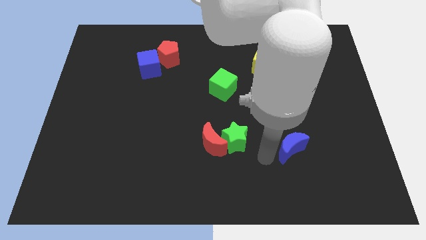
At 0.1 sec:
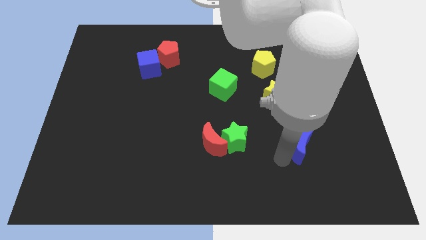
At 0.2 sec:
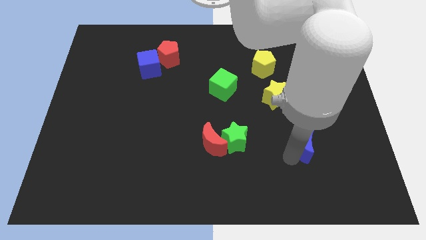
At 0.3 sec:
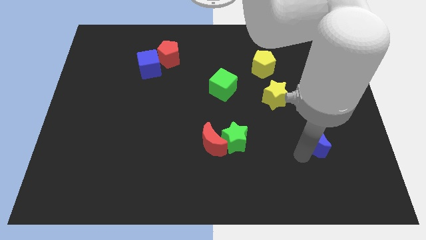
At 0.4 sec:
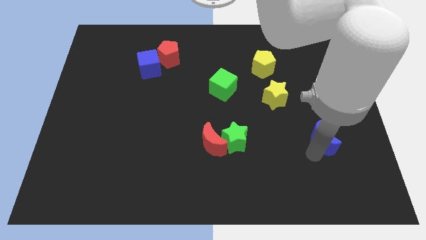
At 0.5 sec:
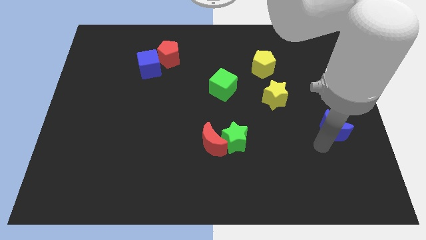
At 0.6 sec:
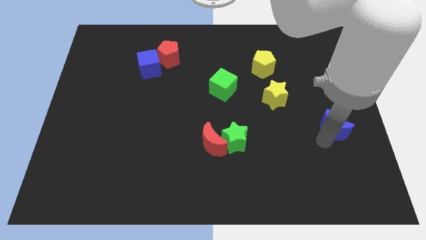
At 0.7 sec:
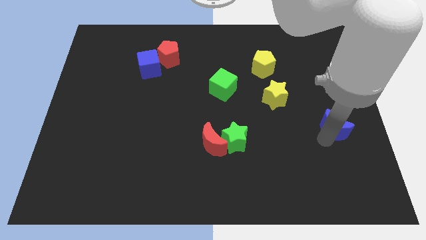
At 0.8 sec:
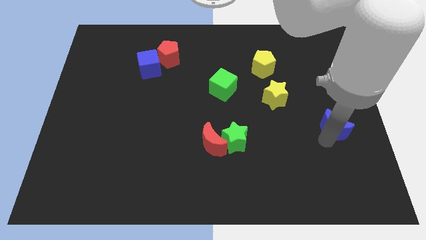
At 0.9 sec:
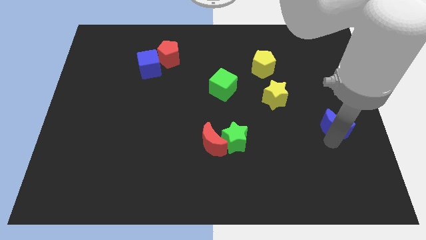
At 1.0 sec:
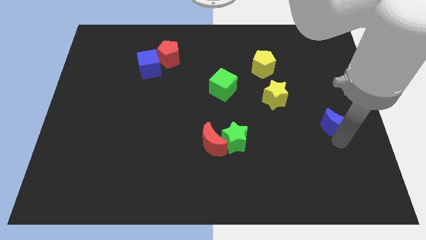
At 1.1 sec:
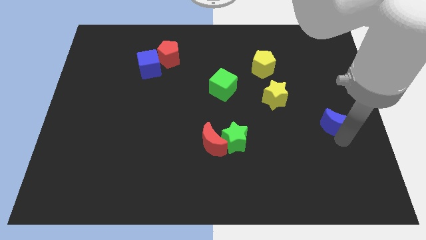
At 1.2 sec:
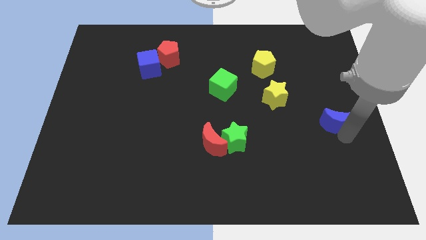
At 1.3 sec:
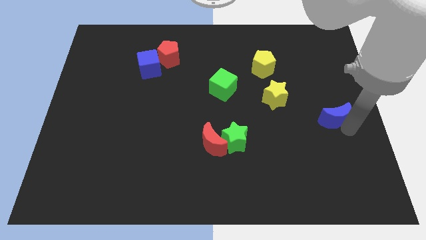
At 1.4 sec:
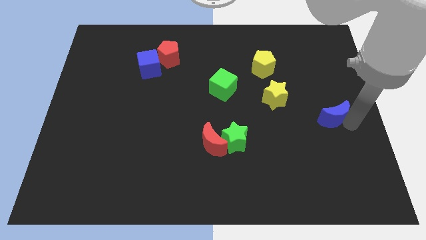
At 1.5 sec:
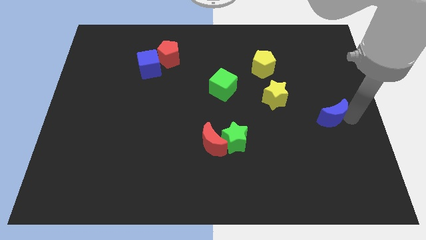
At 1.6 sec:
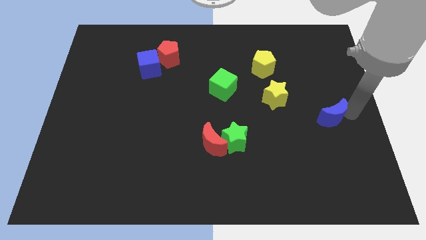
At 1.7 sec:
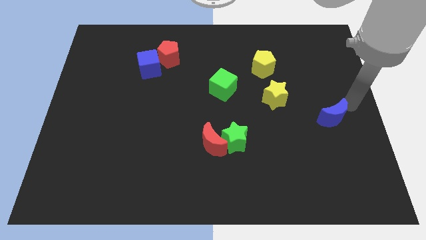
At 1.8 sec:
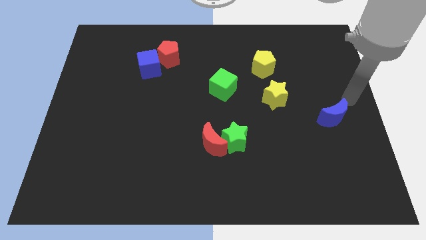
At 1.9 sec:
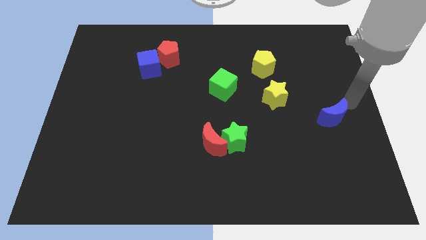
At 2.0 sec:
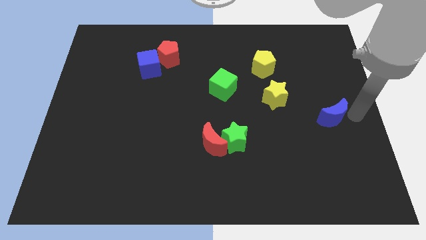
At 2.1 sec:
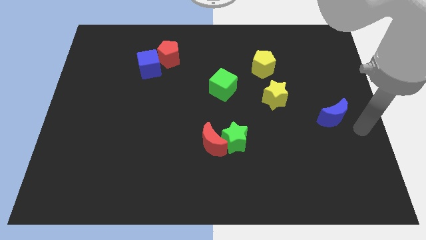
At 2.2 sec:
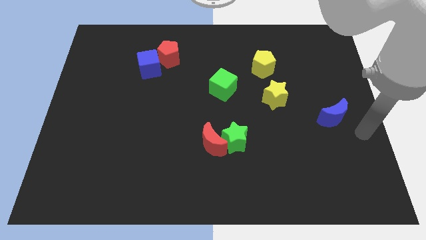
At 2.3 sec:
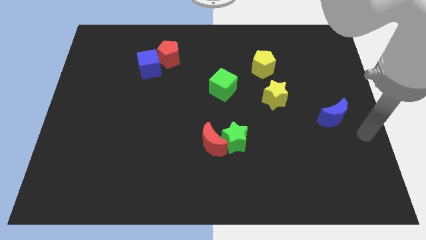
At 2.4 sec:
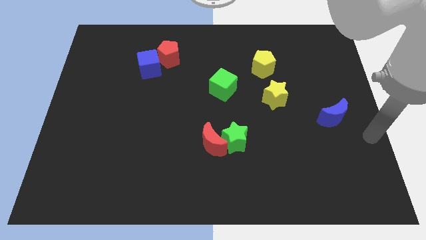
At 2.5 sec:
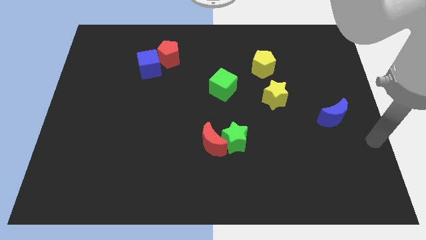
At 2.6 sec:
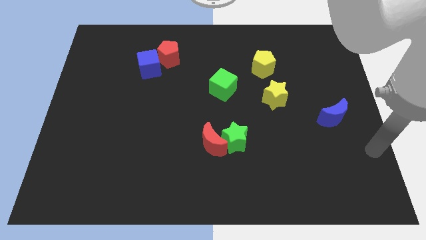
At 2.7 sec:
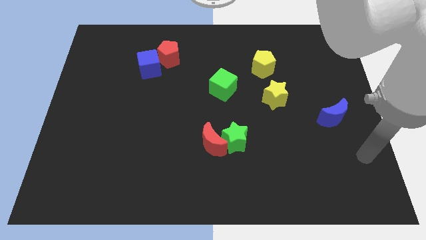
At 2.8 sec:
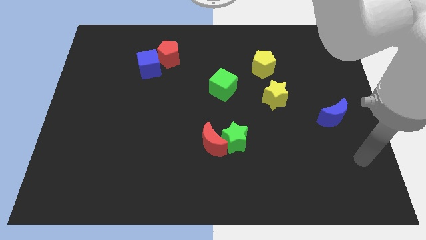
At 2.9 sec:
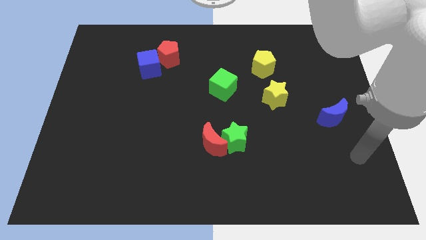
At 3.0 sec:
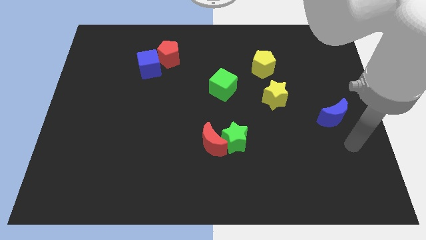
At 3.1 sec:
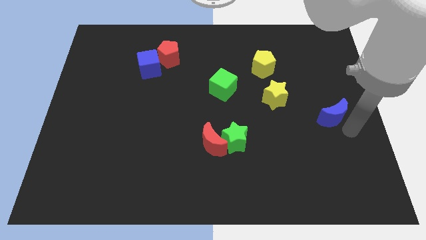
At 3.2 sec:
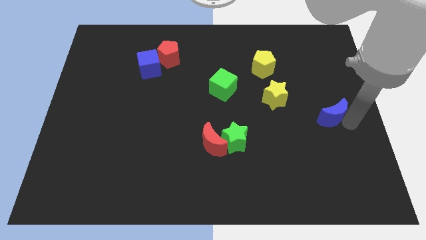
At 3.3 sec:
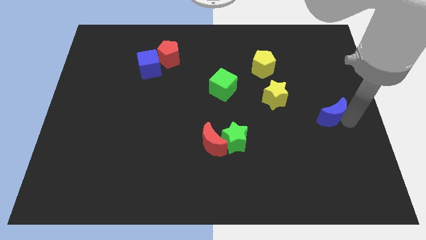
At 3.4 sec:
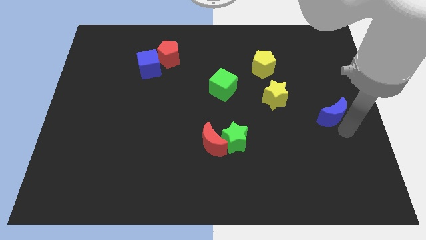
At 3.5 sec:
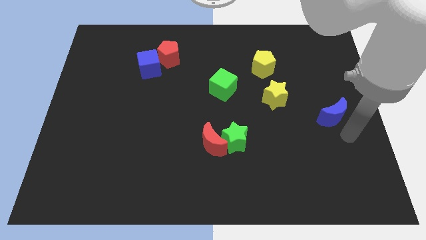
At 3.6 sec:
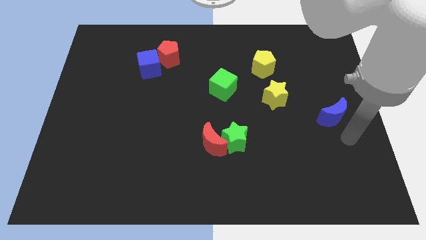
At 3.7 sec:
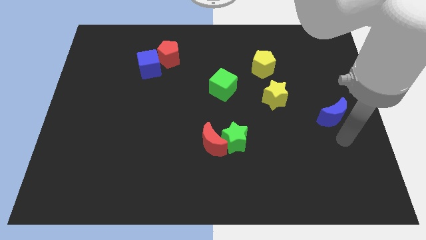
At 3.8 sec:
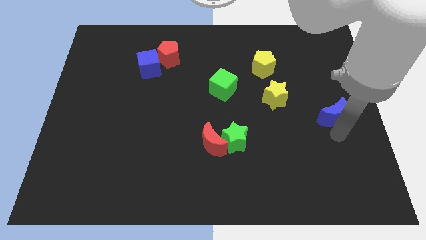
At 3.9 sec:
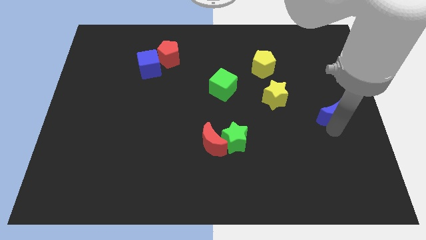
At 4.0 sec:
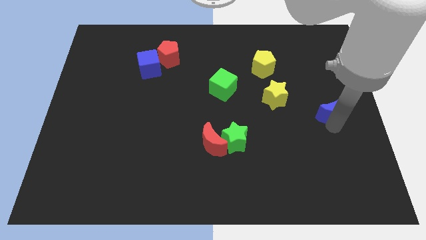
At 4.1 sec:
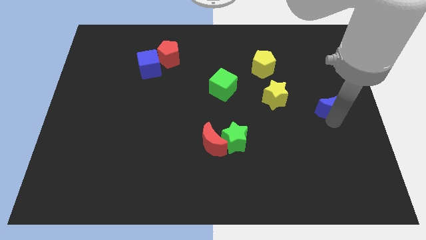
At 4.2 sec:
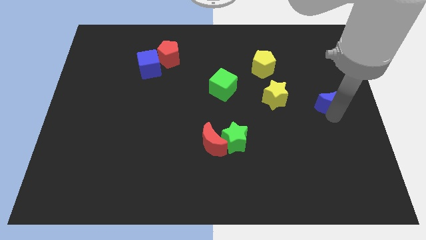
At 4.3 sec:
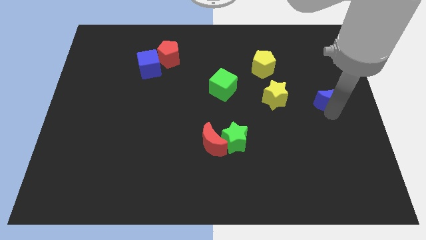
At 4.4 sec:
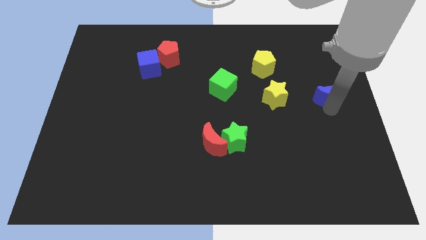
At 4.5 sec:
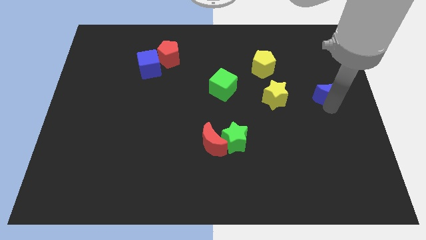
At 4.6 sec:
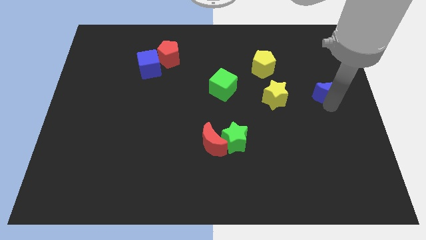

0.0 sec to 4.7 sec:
place the blue moon right to the yellow star

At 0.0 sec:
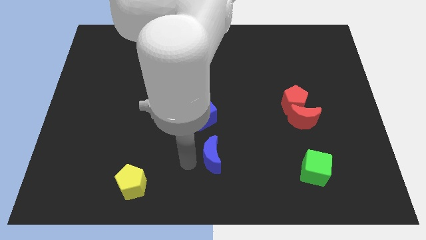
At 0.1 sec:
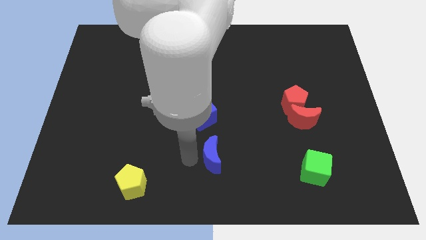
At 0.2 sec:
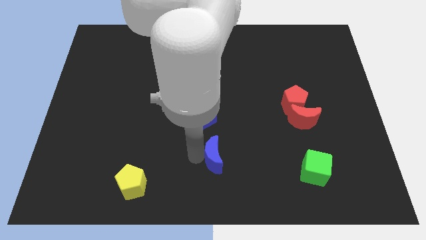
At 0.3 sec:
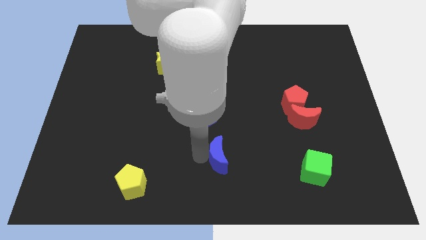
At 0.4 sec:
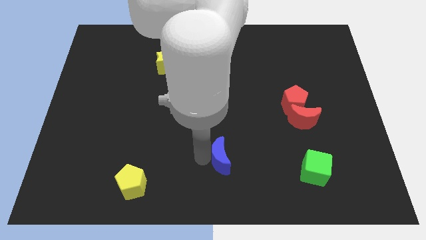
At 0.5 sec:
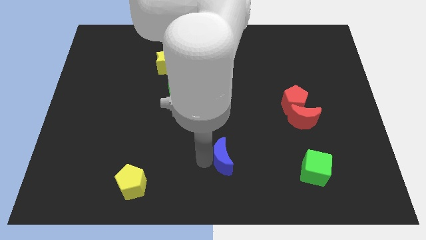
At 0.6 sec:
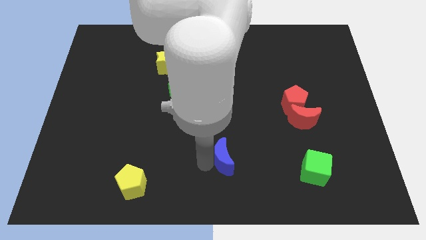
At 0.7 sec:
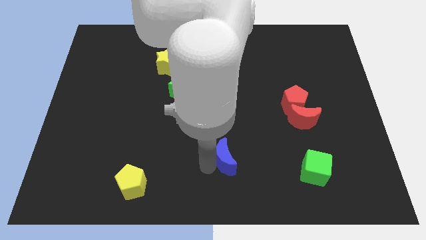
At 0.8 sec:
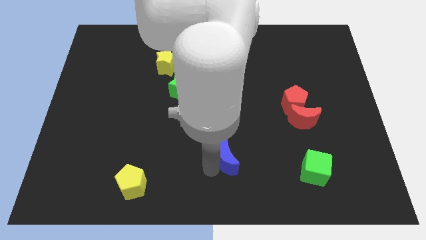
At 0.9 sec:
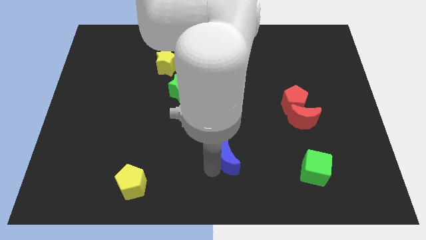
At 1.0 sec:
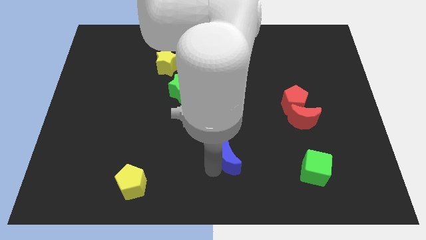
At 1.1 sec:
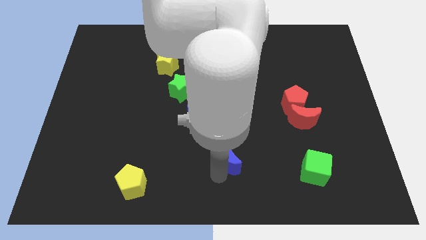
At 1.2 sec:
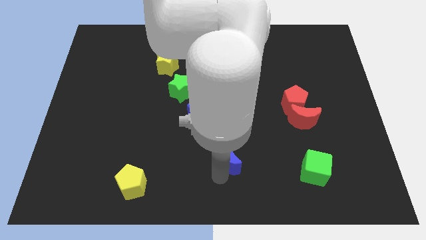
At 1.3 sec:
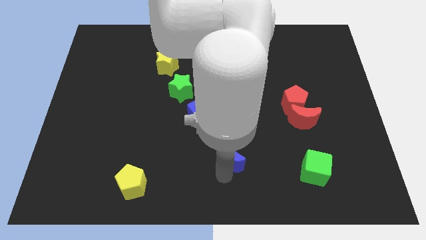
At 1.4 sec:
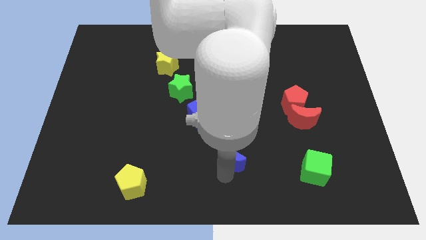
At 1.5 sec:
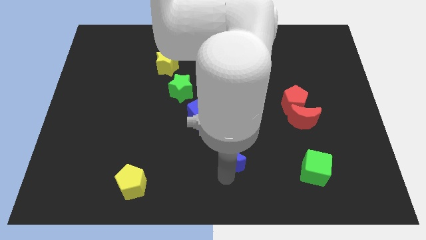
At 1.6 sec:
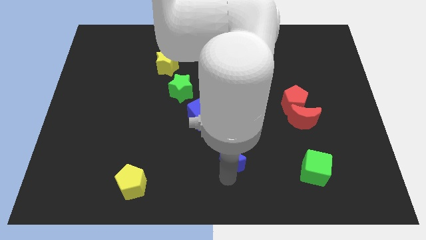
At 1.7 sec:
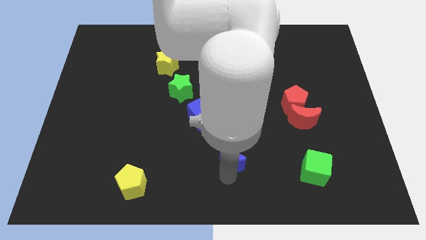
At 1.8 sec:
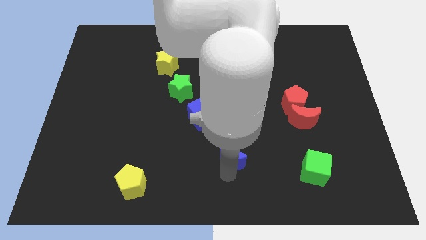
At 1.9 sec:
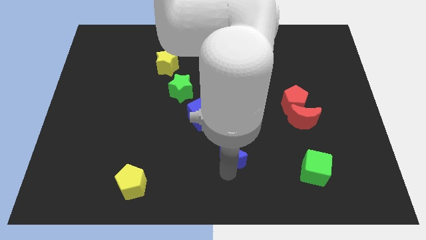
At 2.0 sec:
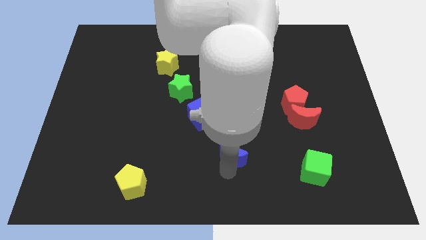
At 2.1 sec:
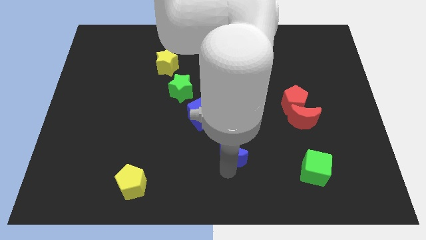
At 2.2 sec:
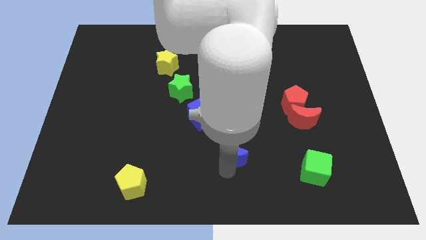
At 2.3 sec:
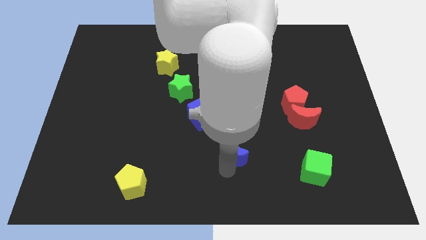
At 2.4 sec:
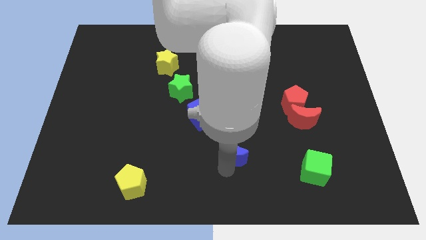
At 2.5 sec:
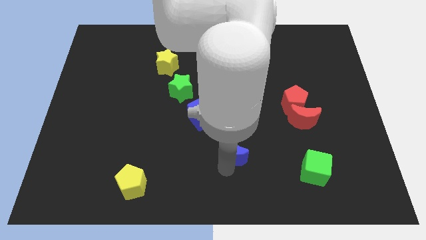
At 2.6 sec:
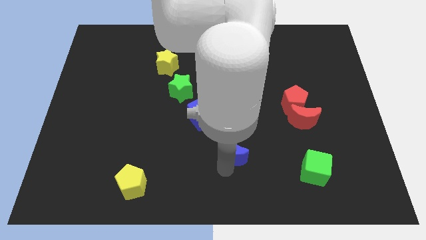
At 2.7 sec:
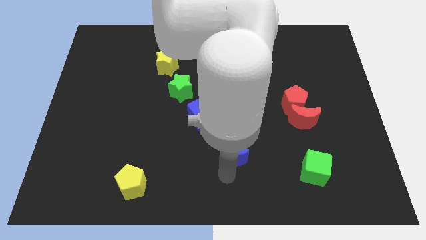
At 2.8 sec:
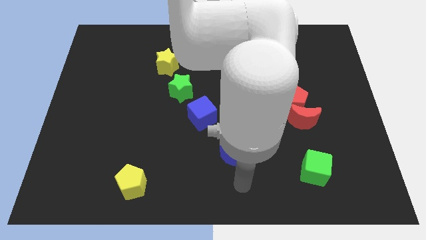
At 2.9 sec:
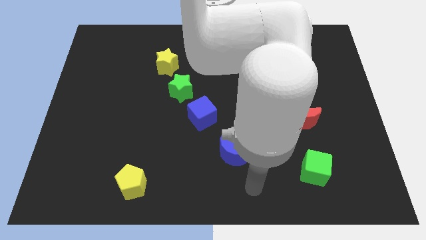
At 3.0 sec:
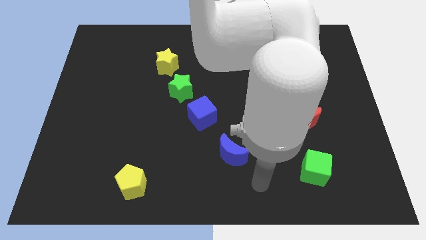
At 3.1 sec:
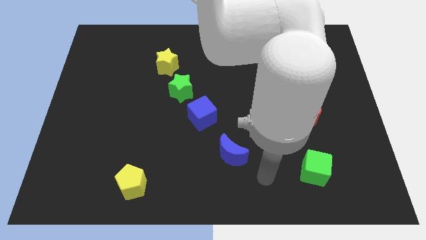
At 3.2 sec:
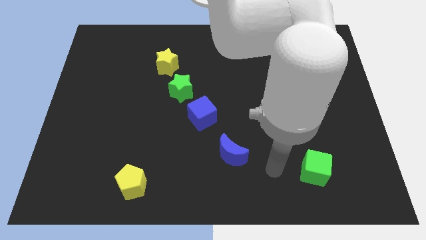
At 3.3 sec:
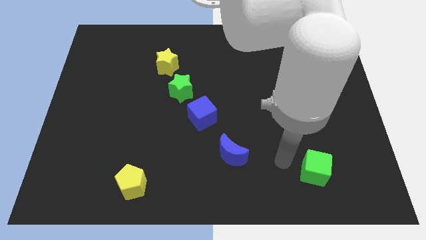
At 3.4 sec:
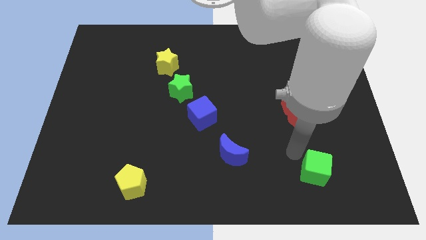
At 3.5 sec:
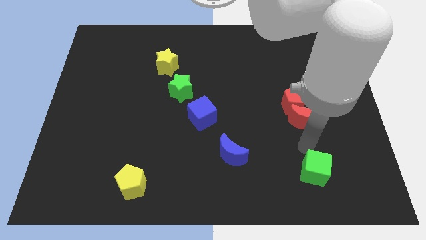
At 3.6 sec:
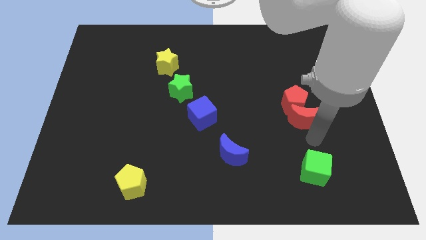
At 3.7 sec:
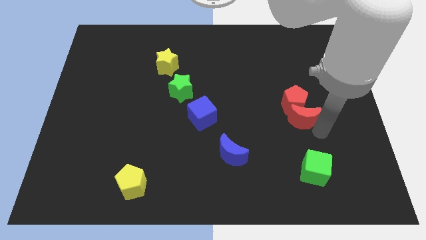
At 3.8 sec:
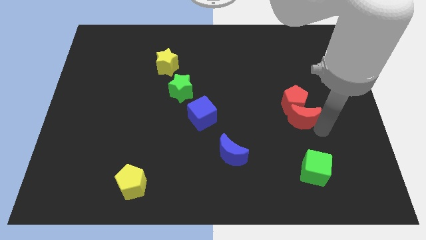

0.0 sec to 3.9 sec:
adjust the blue moon to form a diagonal line of four blocks

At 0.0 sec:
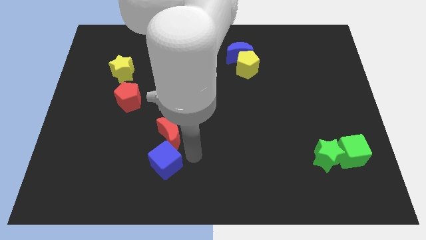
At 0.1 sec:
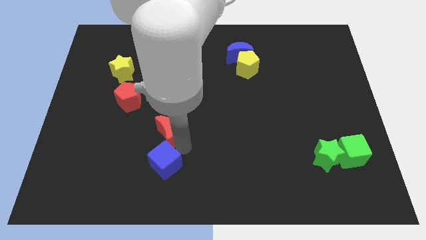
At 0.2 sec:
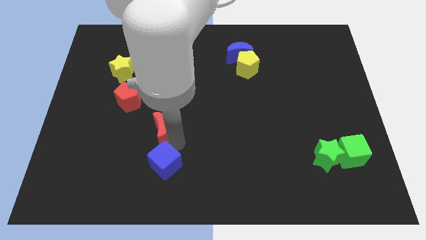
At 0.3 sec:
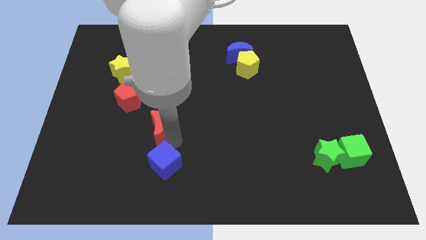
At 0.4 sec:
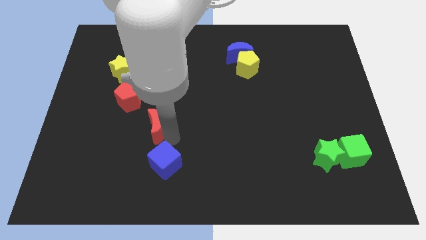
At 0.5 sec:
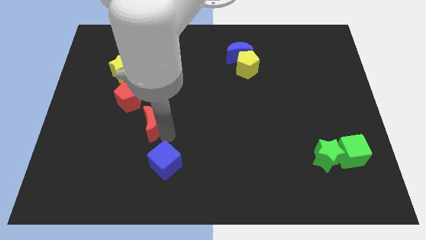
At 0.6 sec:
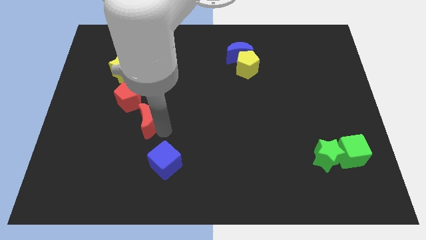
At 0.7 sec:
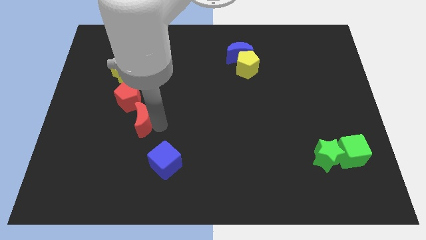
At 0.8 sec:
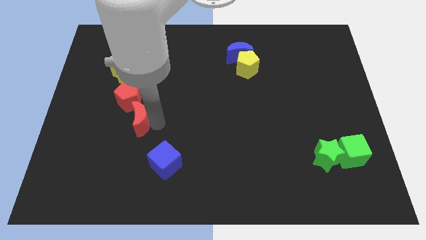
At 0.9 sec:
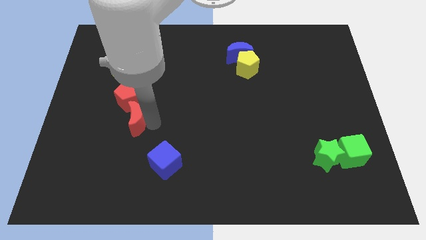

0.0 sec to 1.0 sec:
place red crescent in between the red pentagon and blue cube
